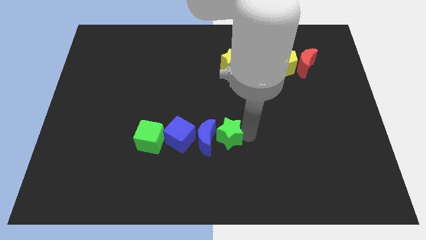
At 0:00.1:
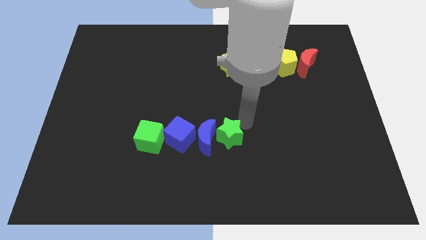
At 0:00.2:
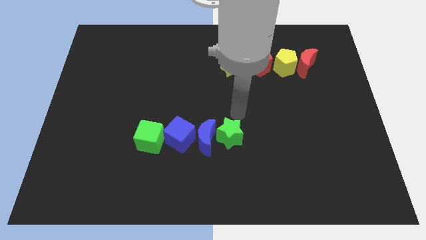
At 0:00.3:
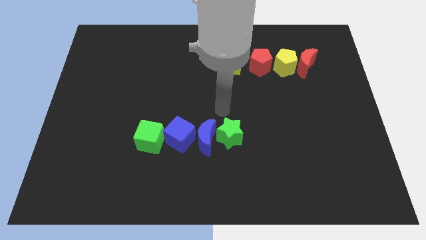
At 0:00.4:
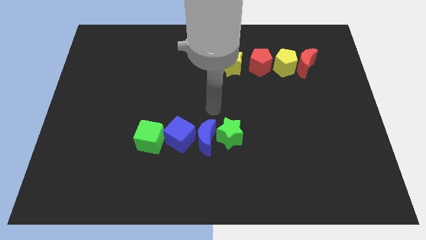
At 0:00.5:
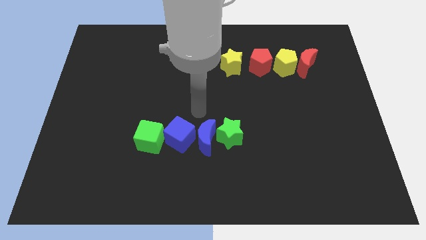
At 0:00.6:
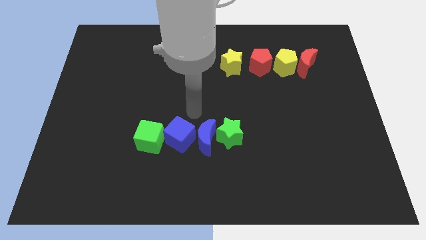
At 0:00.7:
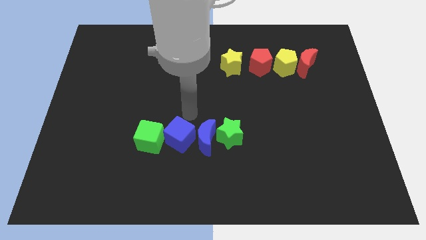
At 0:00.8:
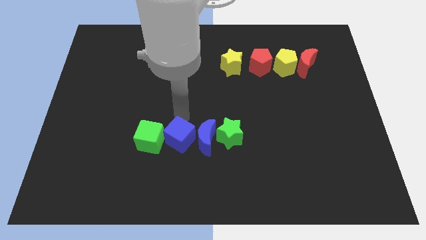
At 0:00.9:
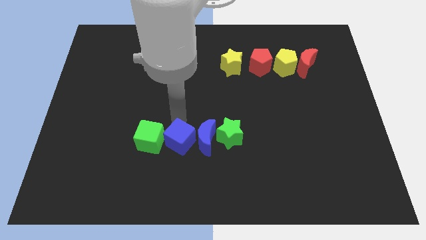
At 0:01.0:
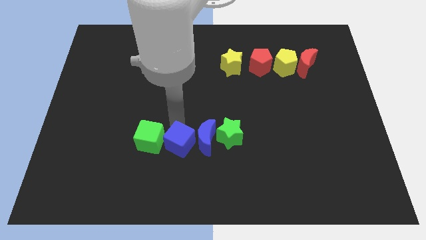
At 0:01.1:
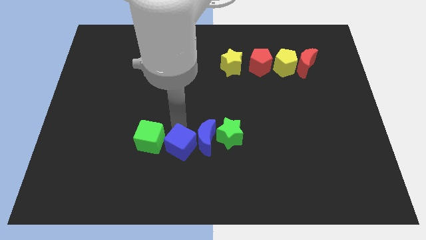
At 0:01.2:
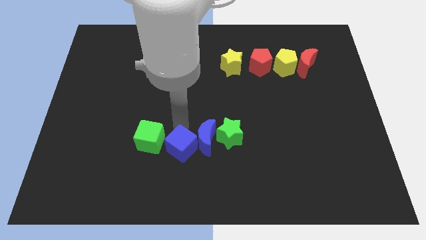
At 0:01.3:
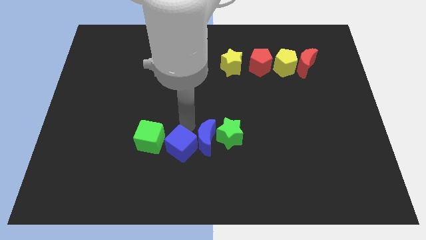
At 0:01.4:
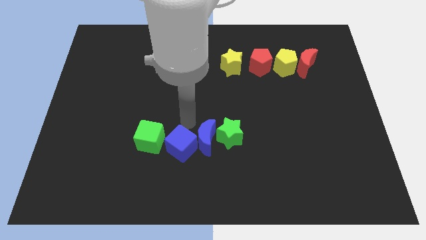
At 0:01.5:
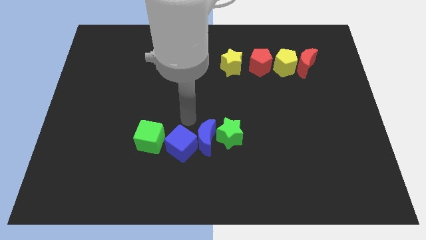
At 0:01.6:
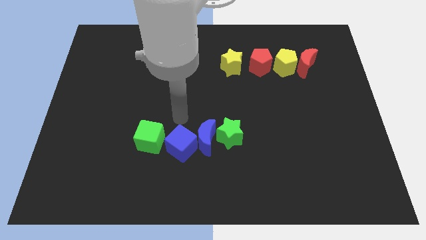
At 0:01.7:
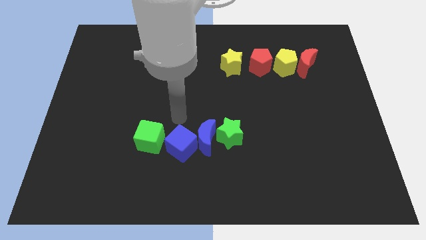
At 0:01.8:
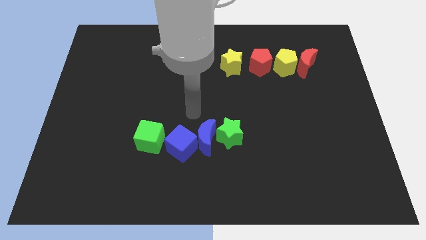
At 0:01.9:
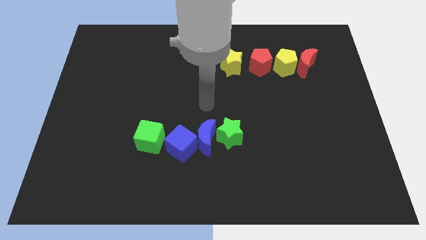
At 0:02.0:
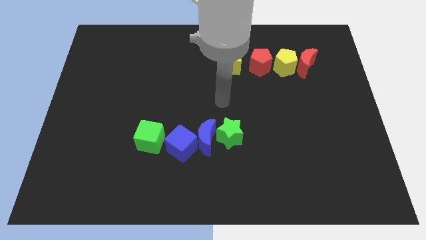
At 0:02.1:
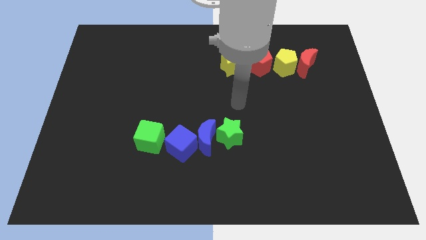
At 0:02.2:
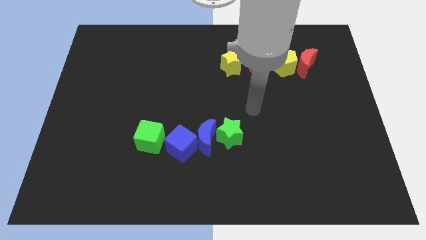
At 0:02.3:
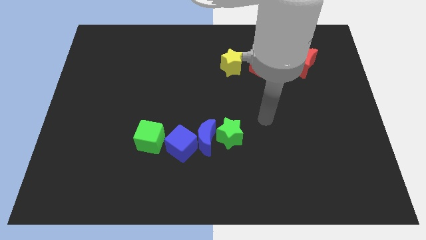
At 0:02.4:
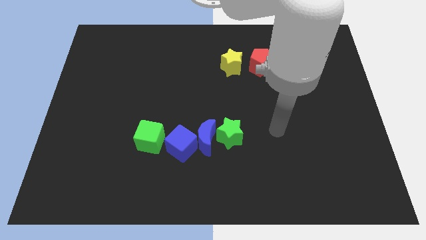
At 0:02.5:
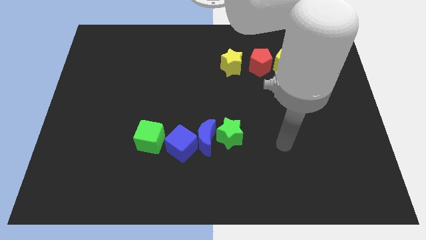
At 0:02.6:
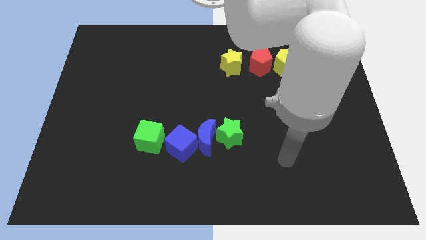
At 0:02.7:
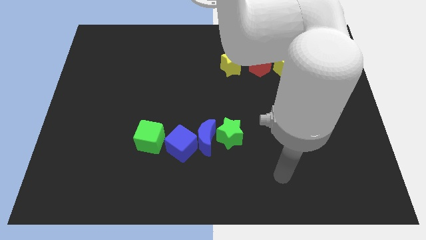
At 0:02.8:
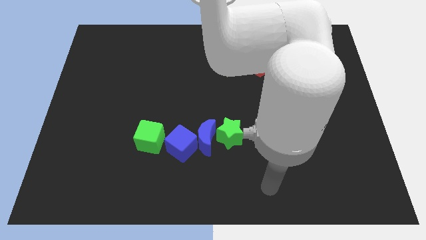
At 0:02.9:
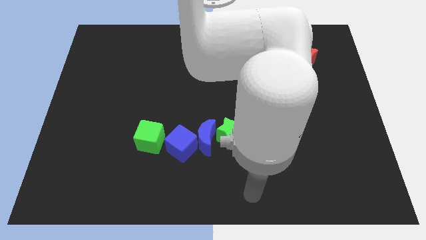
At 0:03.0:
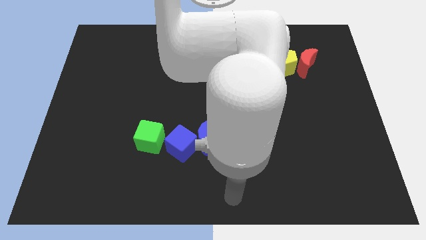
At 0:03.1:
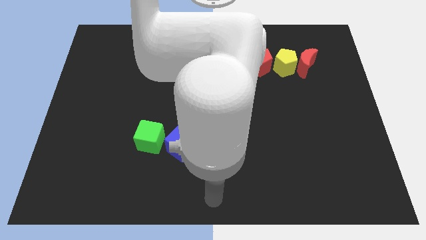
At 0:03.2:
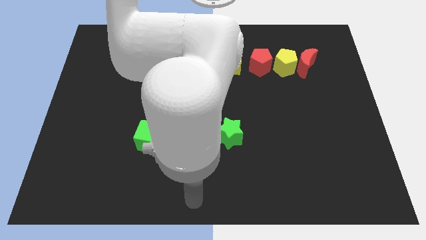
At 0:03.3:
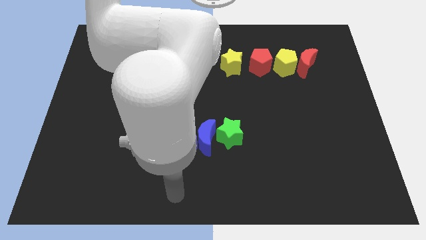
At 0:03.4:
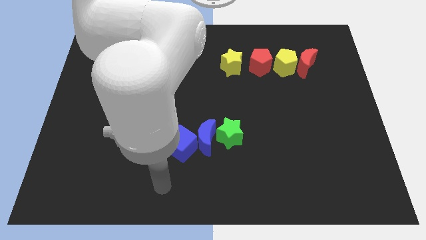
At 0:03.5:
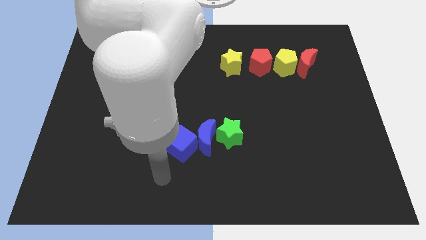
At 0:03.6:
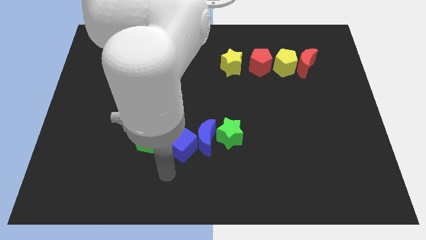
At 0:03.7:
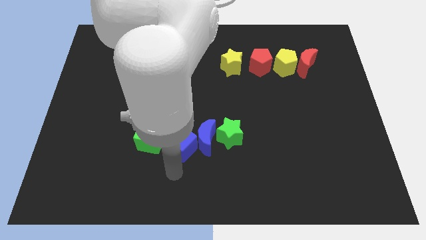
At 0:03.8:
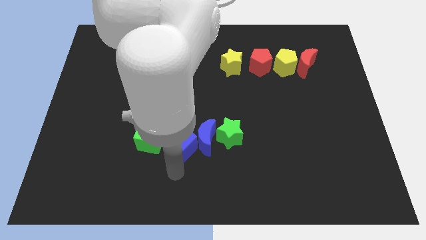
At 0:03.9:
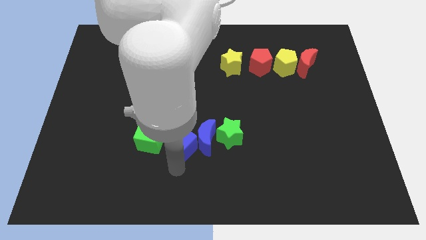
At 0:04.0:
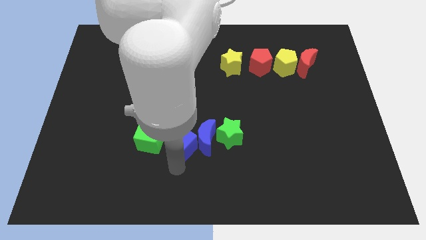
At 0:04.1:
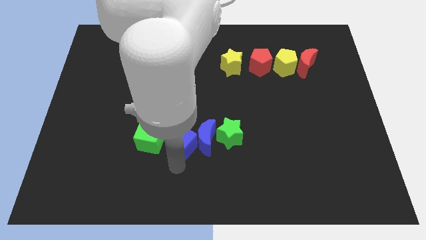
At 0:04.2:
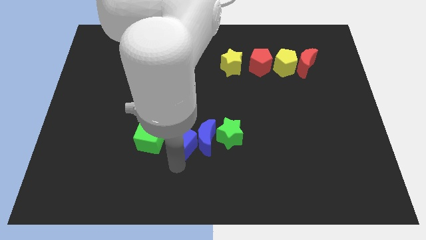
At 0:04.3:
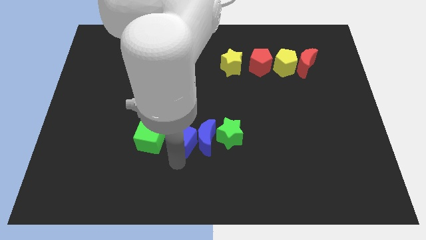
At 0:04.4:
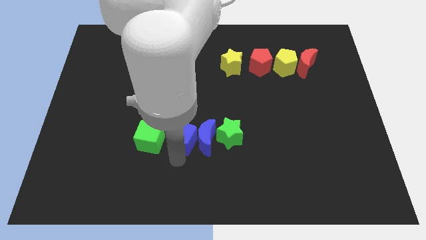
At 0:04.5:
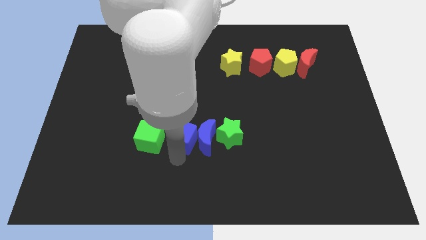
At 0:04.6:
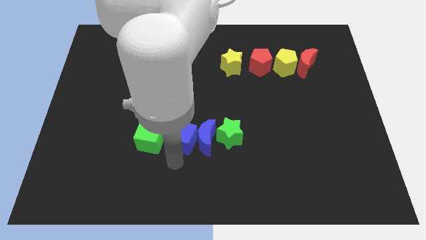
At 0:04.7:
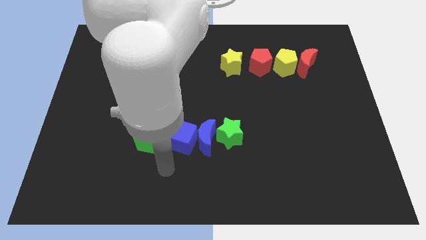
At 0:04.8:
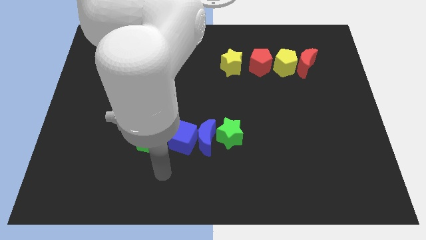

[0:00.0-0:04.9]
push the blue cube slightly to bottom and to top slightly

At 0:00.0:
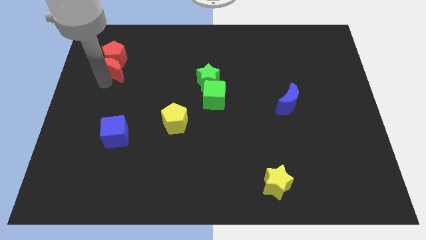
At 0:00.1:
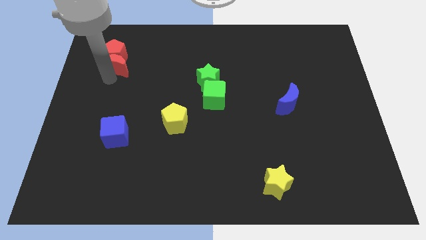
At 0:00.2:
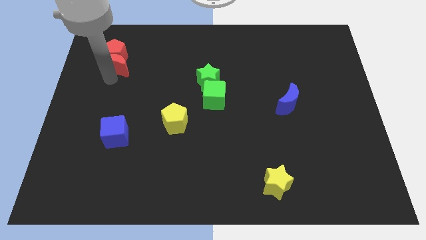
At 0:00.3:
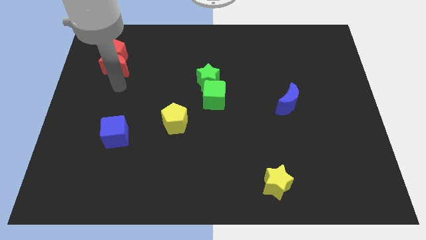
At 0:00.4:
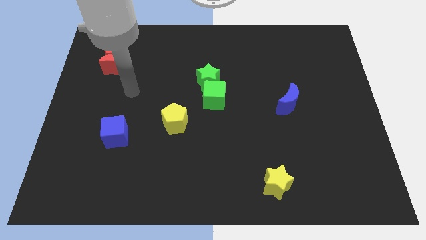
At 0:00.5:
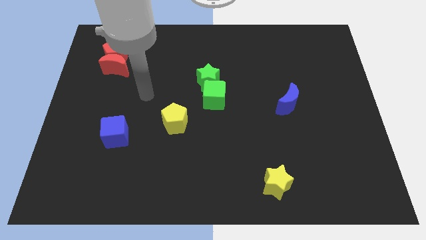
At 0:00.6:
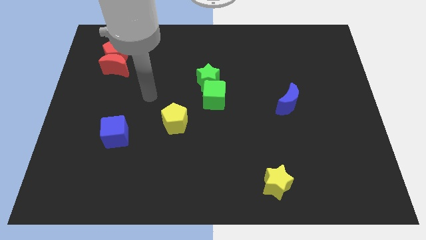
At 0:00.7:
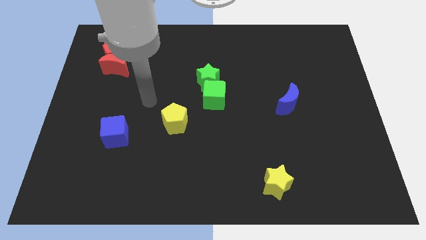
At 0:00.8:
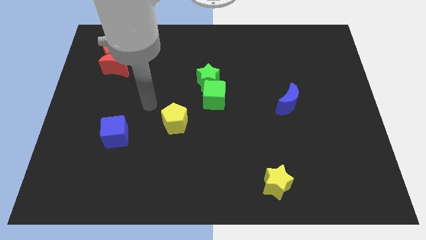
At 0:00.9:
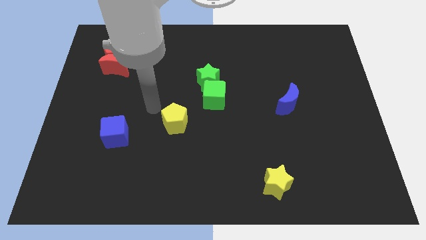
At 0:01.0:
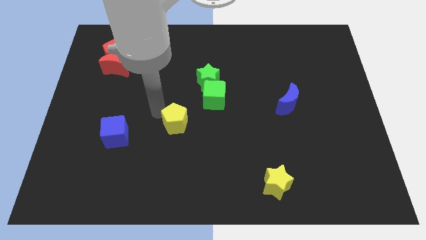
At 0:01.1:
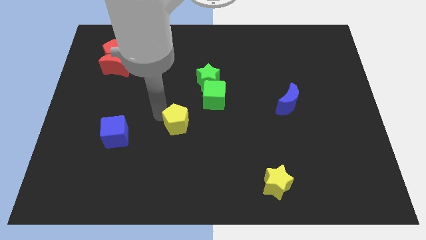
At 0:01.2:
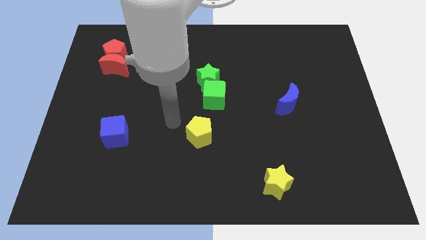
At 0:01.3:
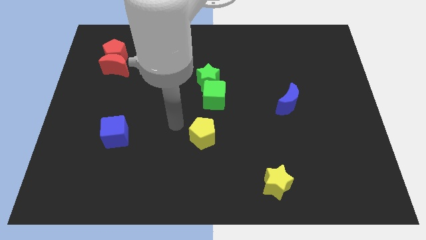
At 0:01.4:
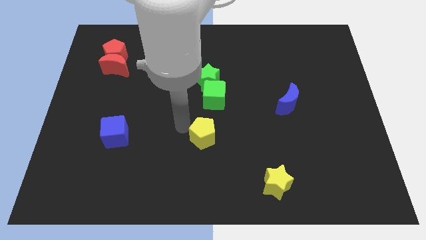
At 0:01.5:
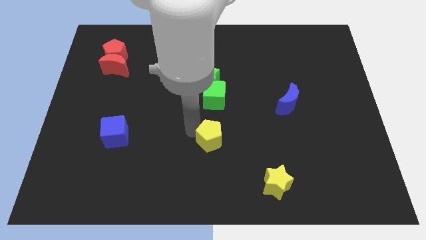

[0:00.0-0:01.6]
hit the yellow pentagon towards bottom side of the board

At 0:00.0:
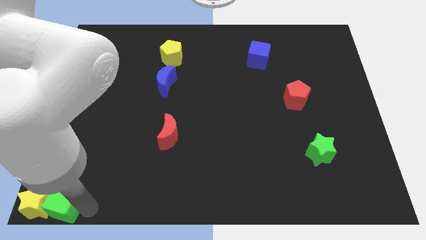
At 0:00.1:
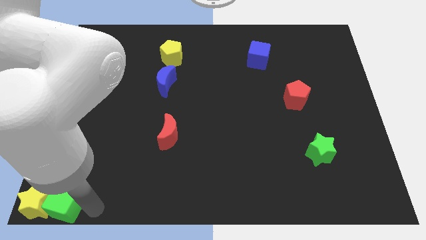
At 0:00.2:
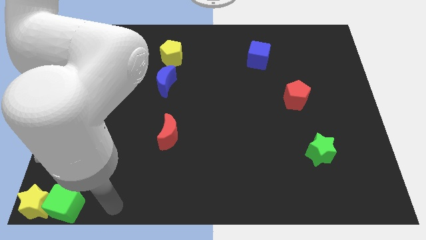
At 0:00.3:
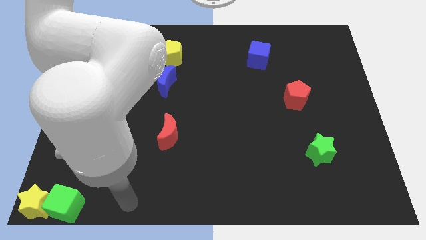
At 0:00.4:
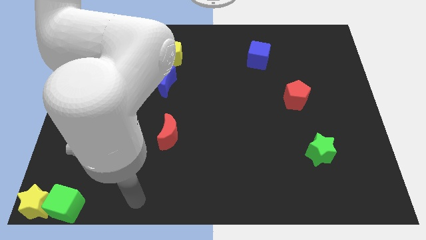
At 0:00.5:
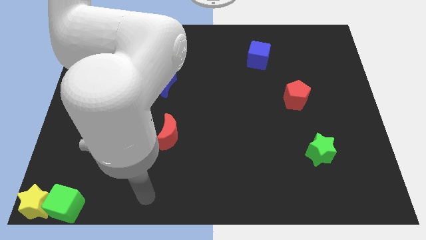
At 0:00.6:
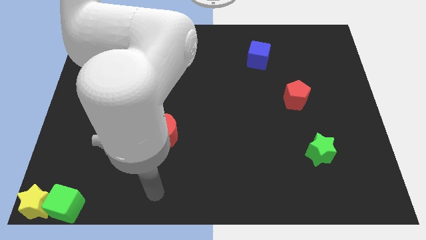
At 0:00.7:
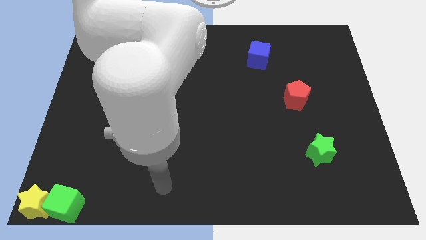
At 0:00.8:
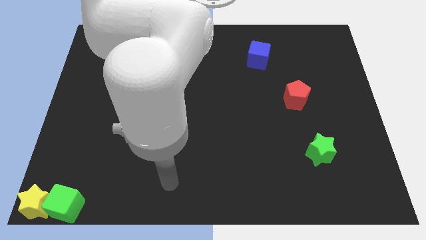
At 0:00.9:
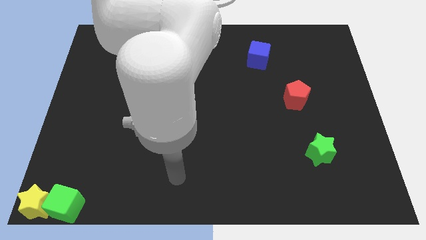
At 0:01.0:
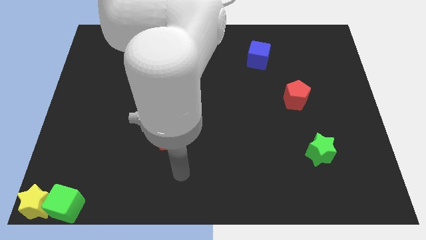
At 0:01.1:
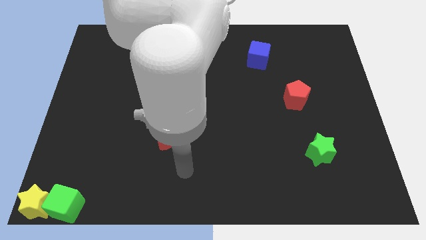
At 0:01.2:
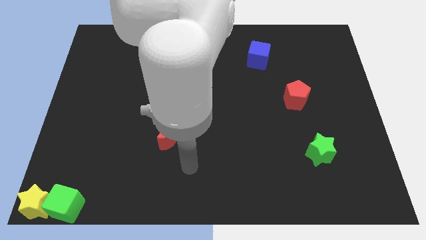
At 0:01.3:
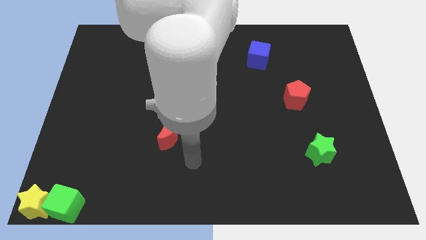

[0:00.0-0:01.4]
move your arm away from green cube

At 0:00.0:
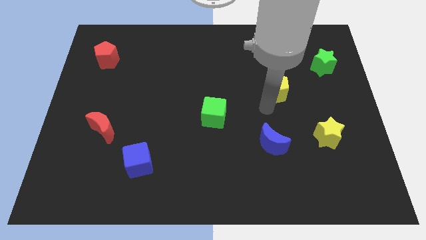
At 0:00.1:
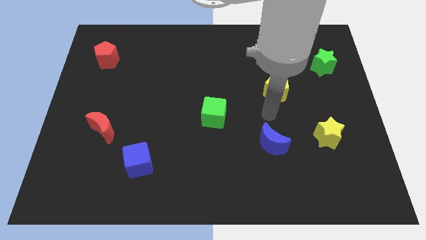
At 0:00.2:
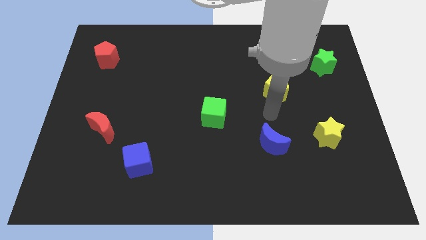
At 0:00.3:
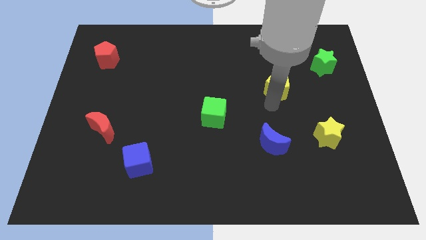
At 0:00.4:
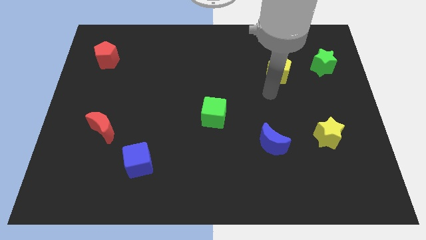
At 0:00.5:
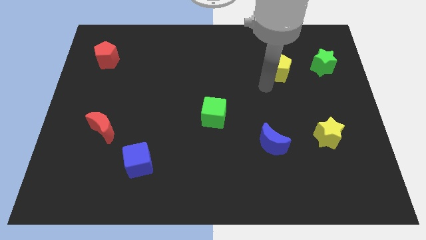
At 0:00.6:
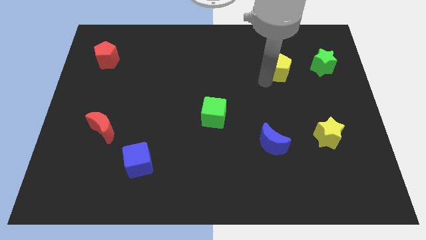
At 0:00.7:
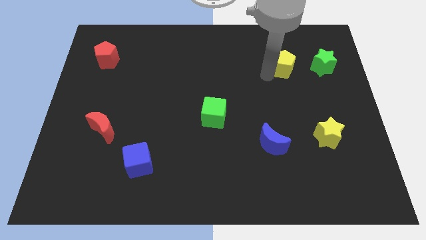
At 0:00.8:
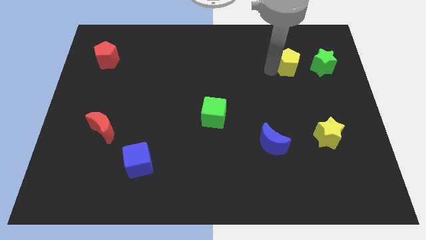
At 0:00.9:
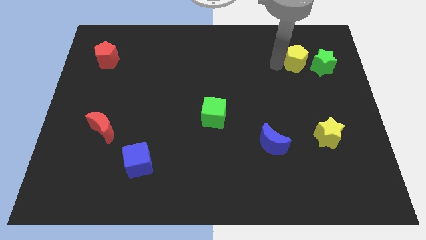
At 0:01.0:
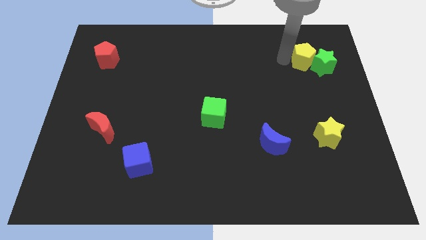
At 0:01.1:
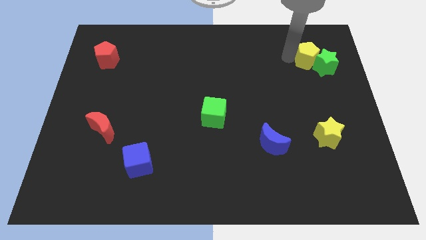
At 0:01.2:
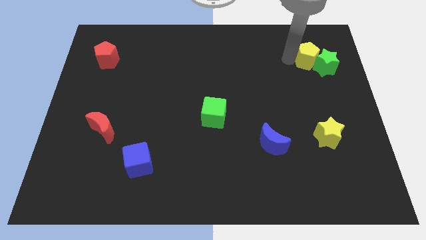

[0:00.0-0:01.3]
move yellow pentagon into green star
